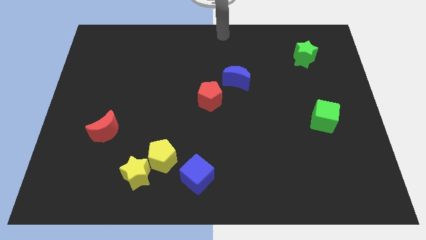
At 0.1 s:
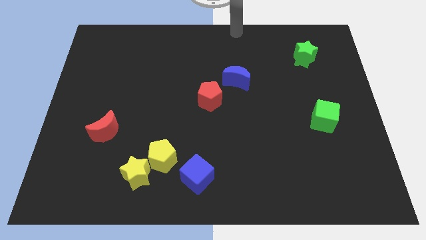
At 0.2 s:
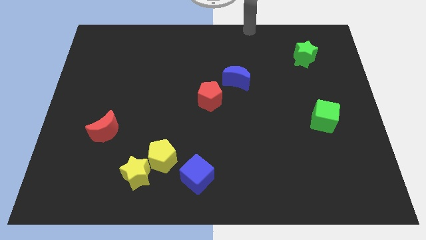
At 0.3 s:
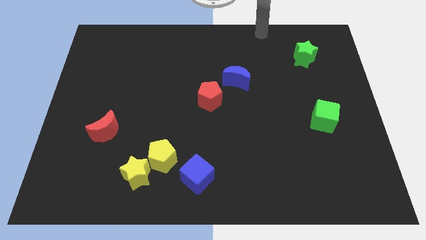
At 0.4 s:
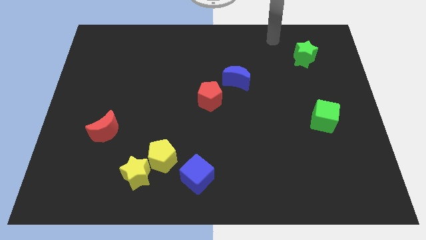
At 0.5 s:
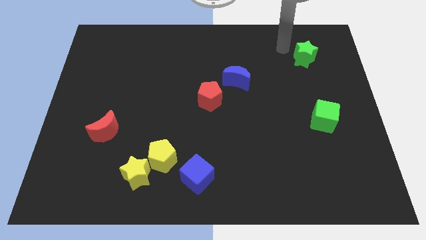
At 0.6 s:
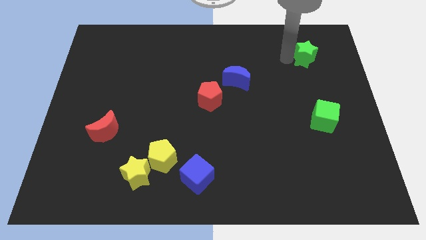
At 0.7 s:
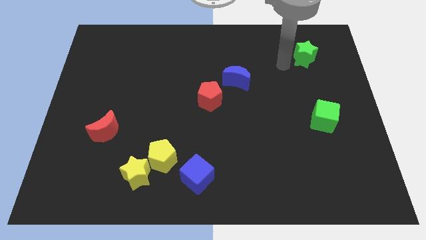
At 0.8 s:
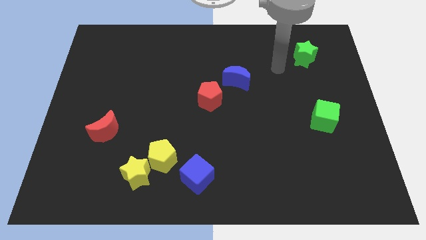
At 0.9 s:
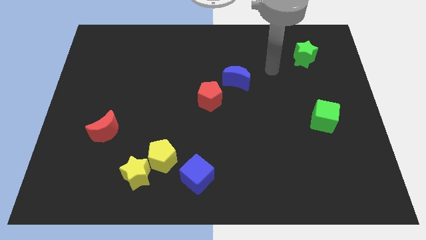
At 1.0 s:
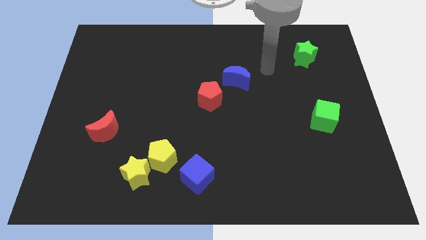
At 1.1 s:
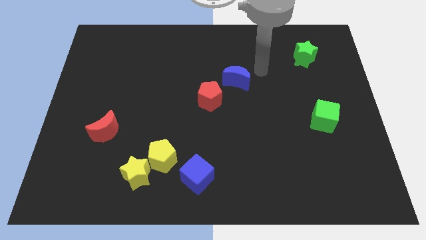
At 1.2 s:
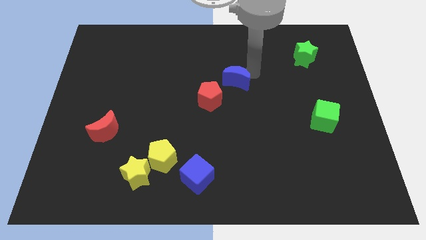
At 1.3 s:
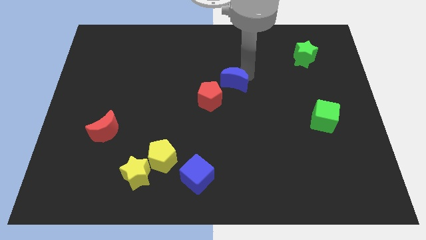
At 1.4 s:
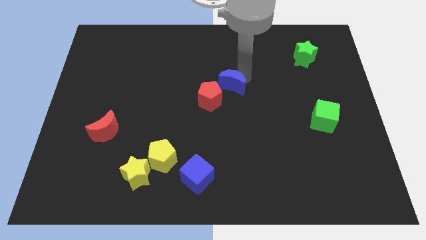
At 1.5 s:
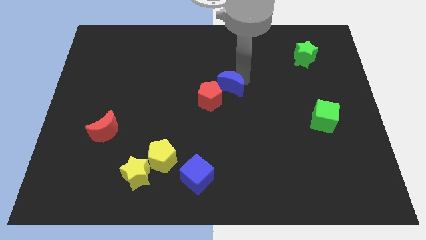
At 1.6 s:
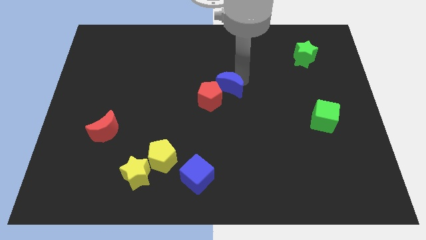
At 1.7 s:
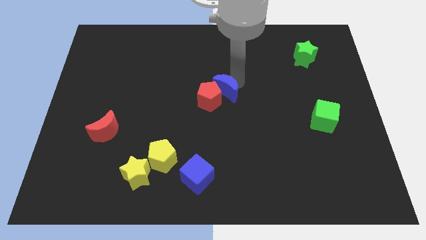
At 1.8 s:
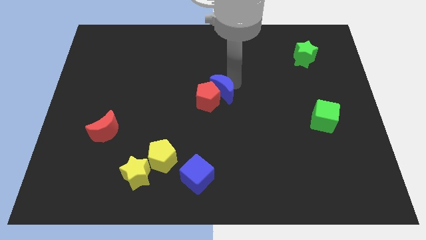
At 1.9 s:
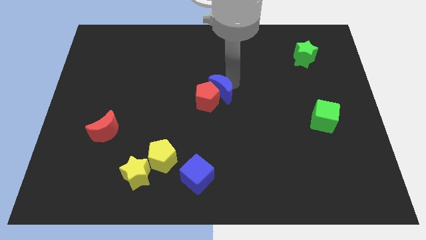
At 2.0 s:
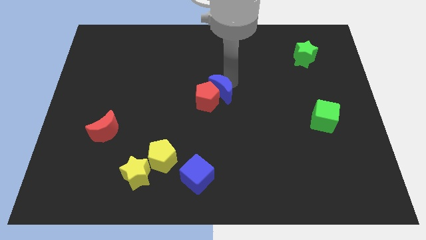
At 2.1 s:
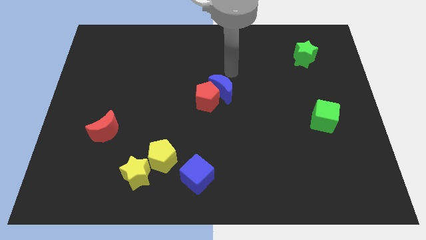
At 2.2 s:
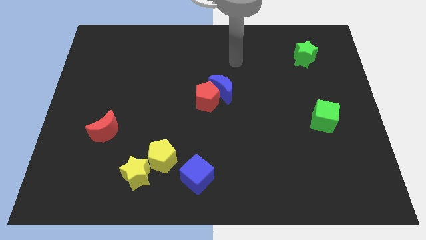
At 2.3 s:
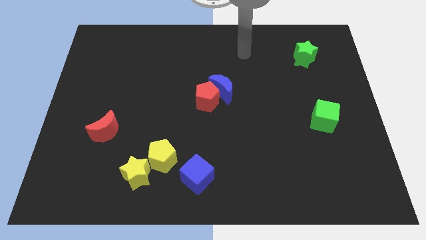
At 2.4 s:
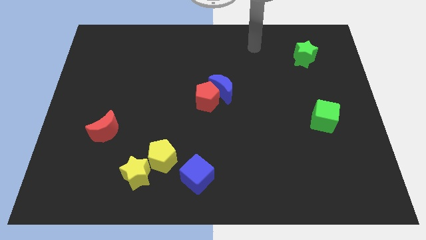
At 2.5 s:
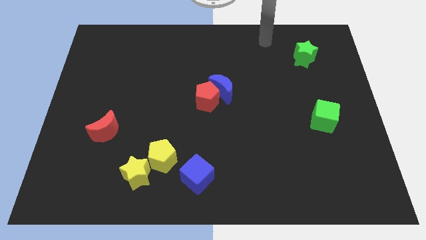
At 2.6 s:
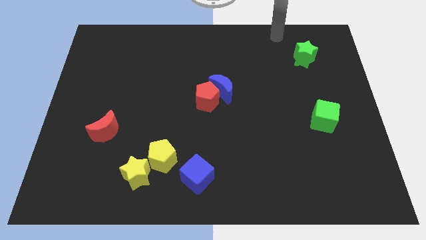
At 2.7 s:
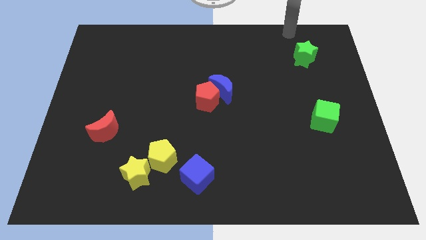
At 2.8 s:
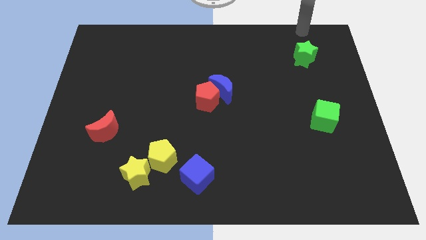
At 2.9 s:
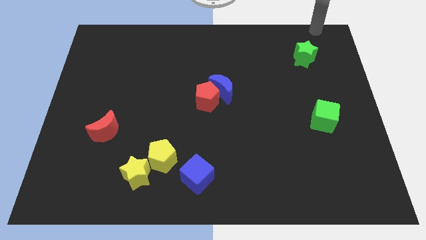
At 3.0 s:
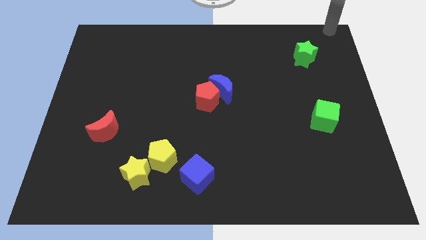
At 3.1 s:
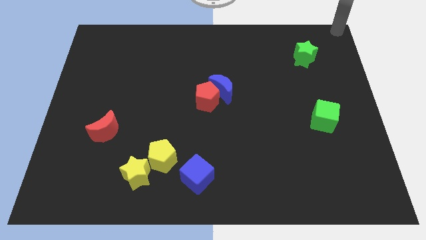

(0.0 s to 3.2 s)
push the blue moon into the red pentagon

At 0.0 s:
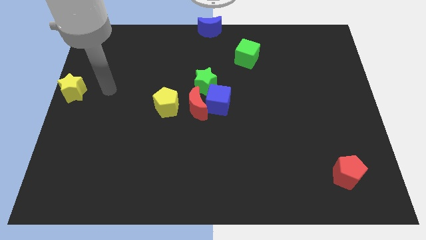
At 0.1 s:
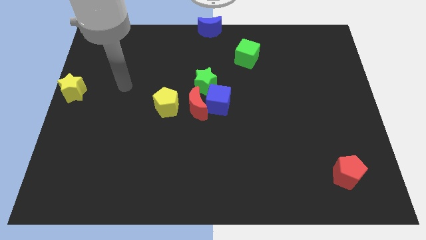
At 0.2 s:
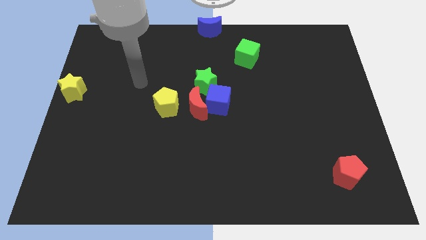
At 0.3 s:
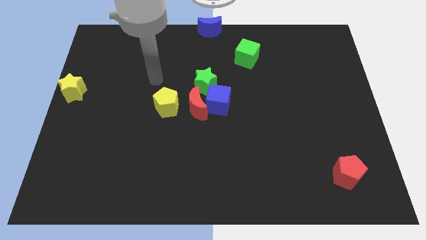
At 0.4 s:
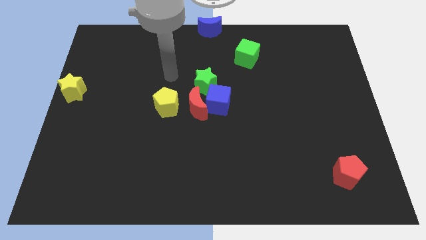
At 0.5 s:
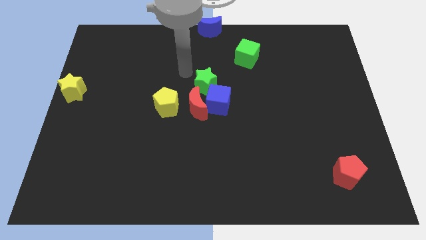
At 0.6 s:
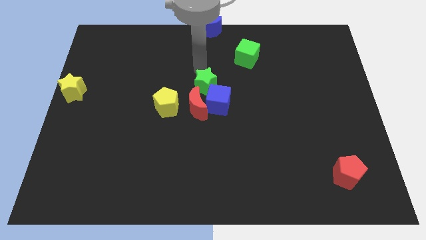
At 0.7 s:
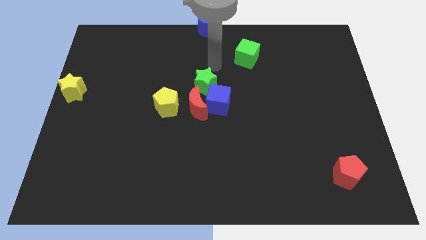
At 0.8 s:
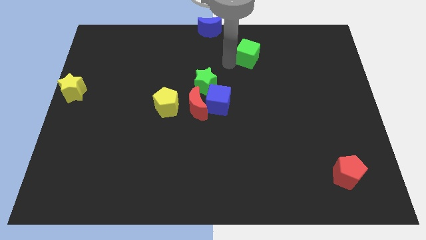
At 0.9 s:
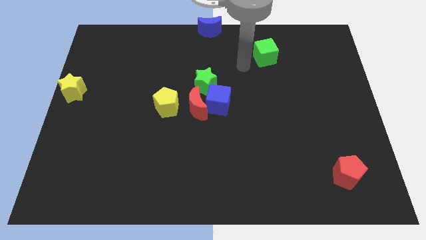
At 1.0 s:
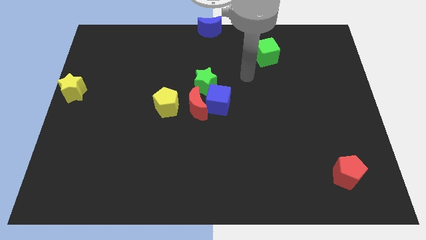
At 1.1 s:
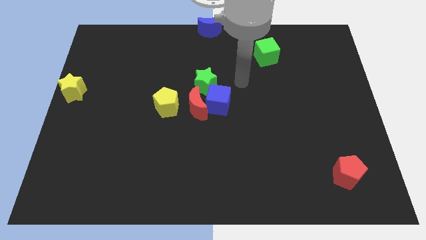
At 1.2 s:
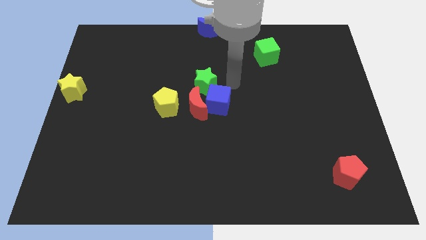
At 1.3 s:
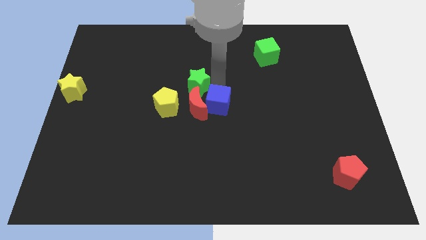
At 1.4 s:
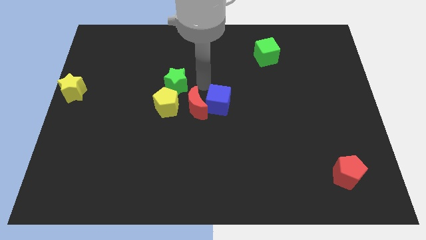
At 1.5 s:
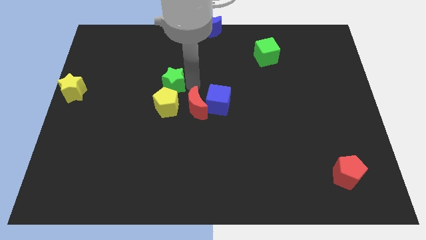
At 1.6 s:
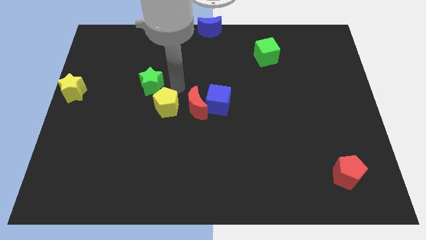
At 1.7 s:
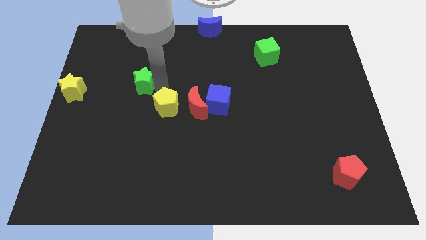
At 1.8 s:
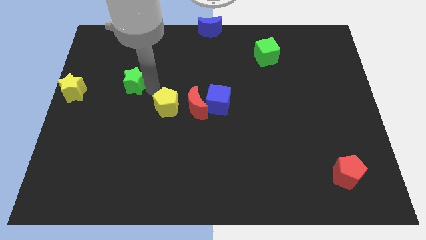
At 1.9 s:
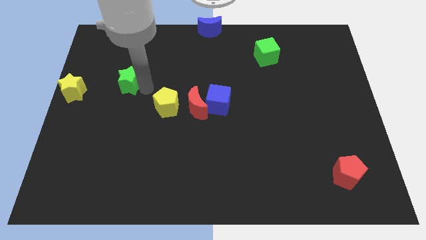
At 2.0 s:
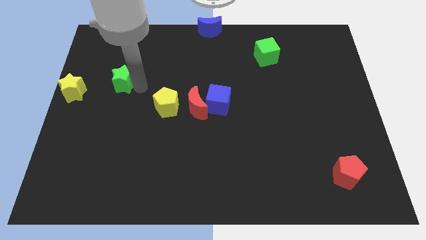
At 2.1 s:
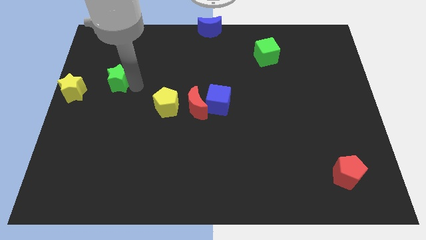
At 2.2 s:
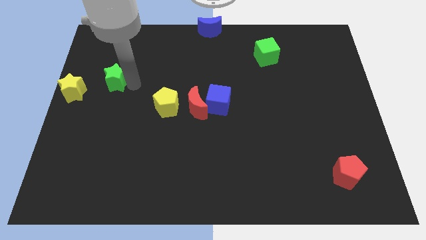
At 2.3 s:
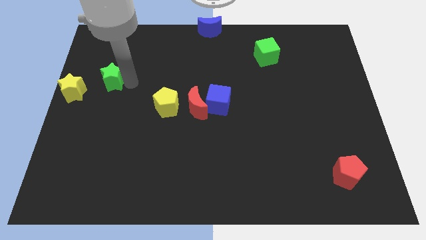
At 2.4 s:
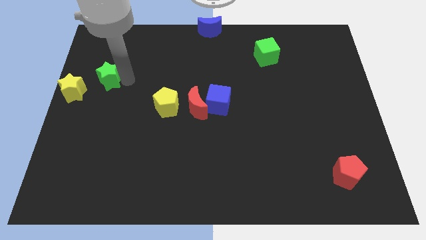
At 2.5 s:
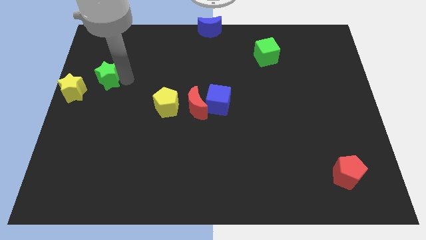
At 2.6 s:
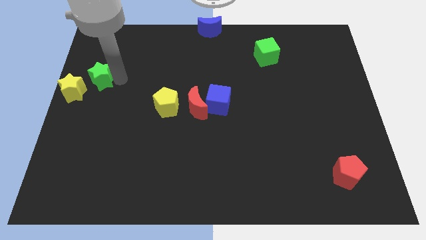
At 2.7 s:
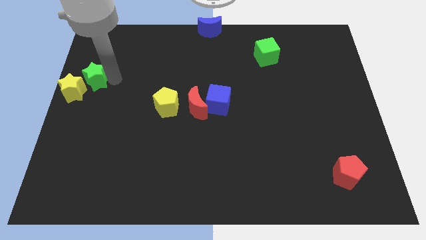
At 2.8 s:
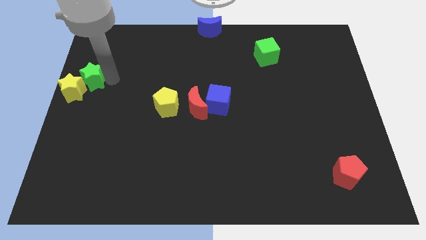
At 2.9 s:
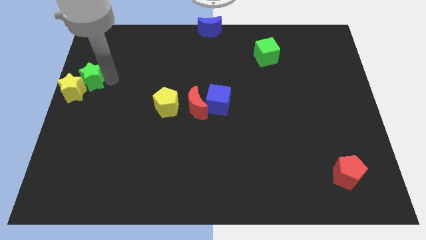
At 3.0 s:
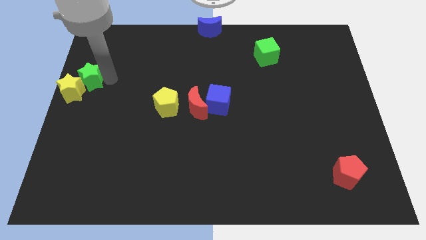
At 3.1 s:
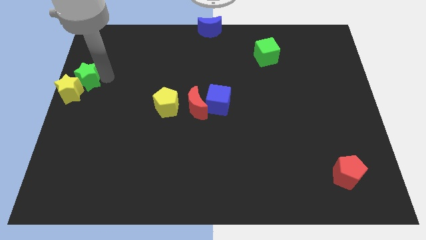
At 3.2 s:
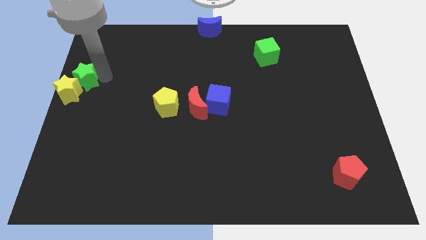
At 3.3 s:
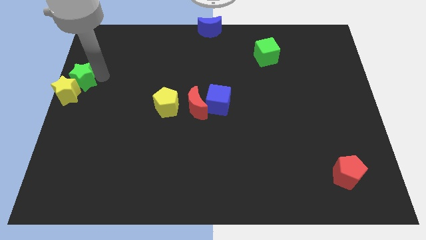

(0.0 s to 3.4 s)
push the green star into the yellow star

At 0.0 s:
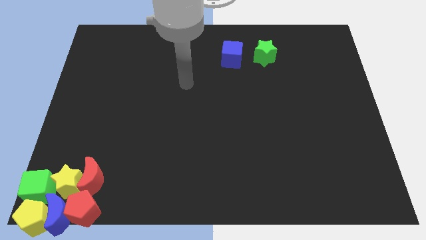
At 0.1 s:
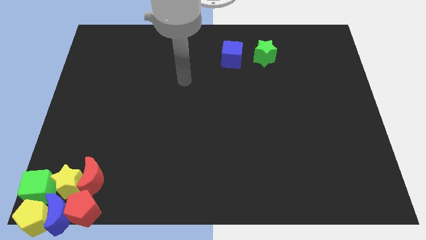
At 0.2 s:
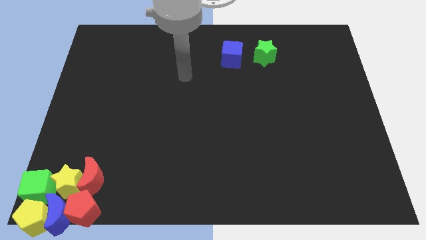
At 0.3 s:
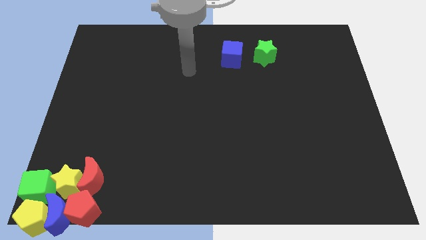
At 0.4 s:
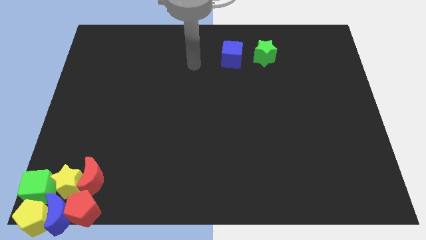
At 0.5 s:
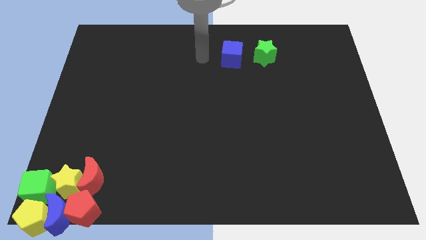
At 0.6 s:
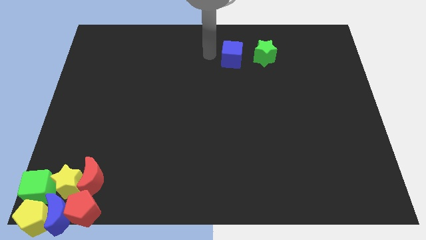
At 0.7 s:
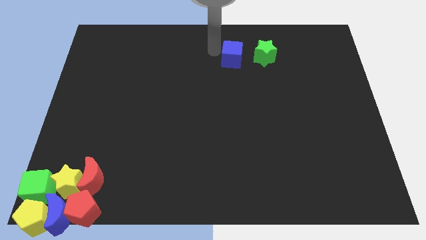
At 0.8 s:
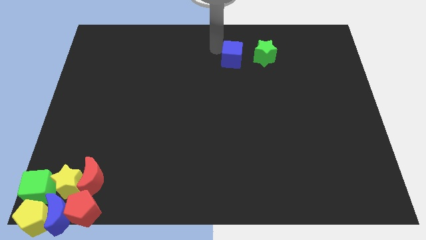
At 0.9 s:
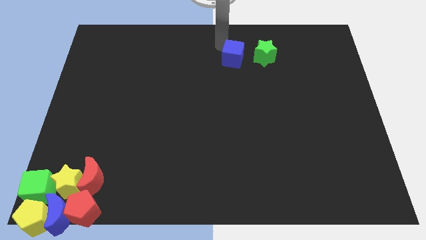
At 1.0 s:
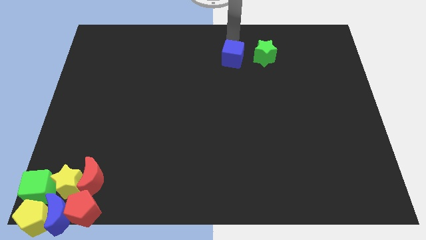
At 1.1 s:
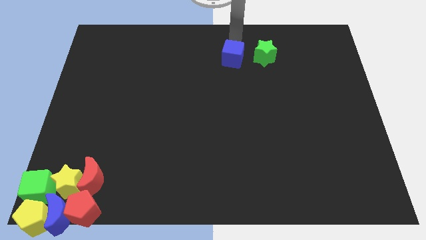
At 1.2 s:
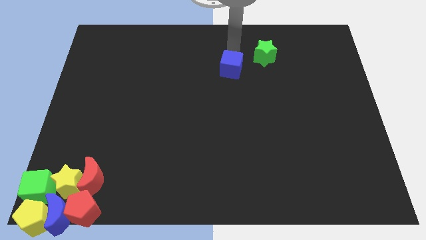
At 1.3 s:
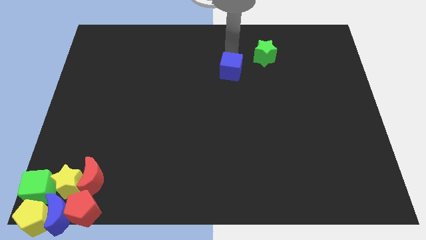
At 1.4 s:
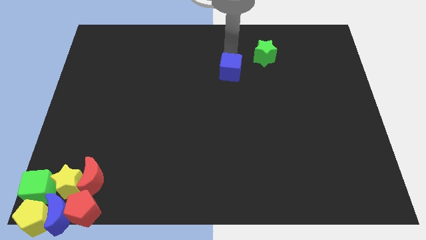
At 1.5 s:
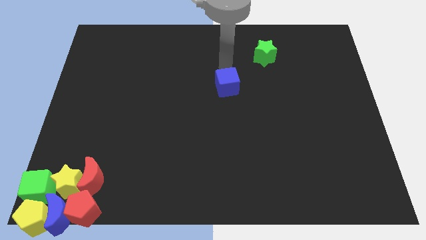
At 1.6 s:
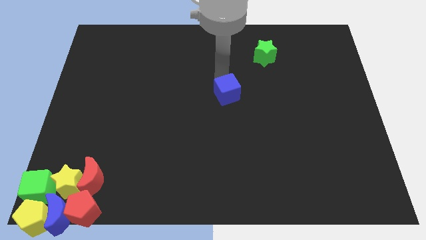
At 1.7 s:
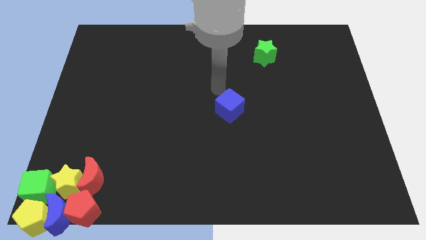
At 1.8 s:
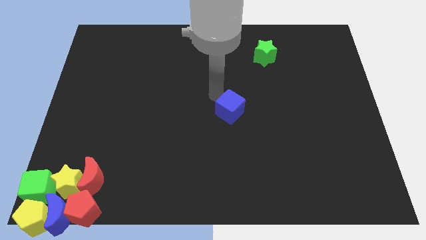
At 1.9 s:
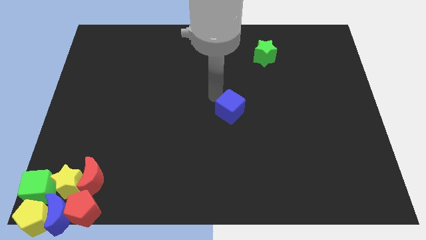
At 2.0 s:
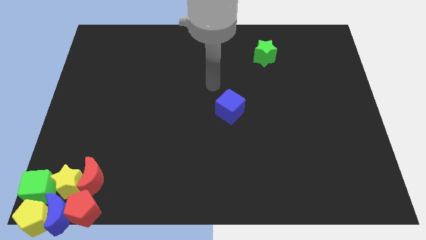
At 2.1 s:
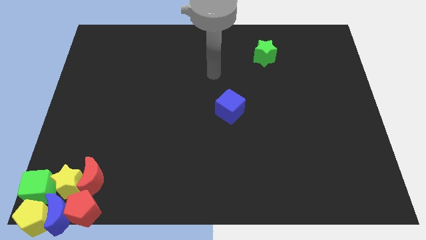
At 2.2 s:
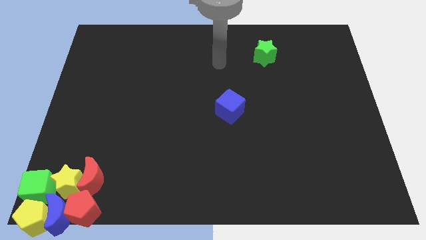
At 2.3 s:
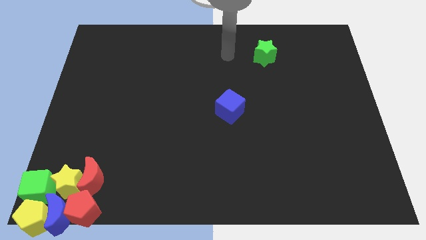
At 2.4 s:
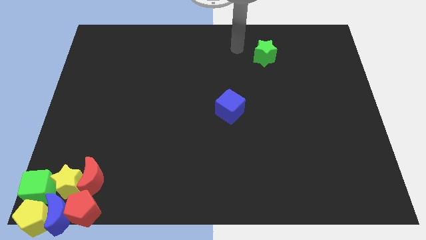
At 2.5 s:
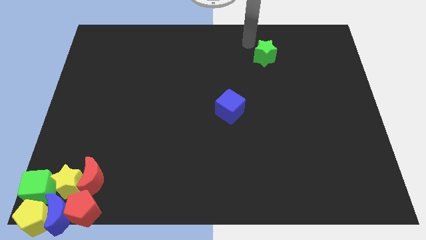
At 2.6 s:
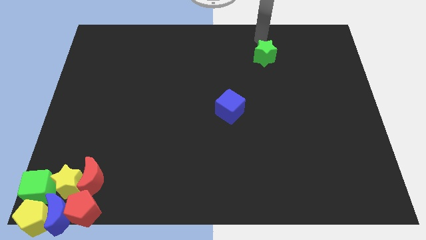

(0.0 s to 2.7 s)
place the blue cube at the center of the board
